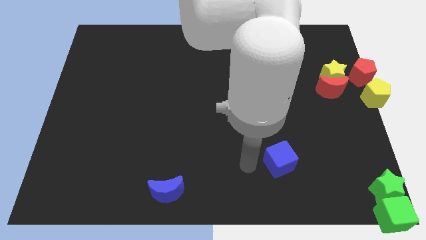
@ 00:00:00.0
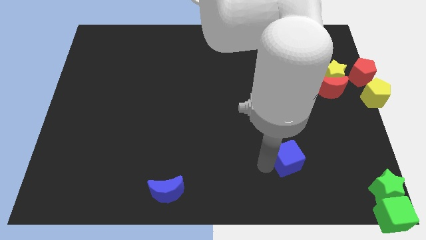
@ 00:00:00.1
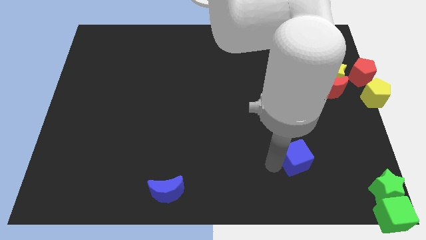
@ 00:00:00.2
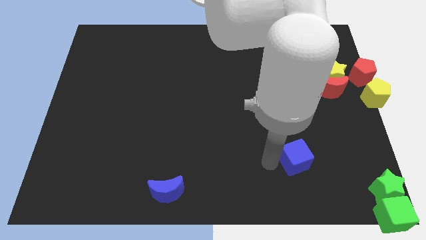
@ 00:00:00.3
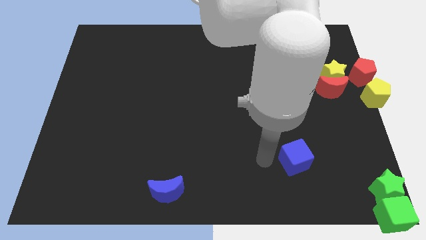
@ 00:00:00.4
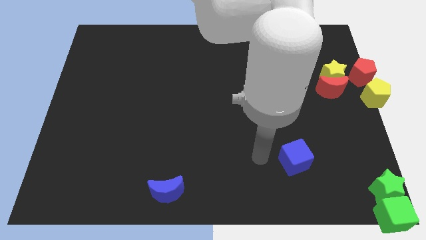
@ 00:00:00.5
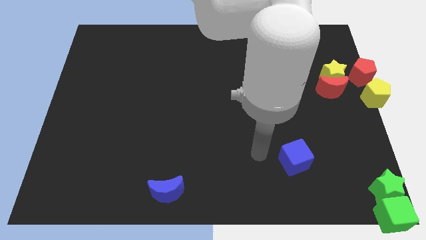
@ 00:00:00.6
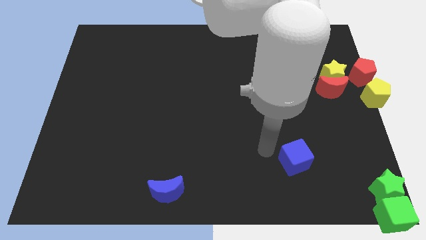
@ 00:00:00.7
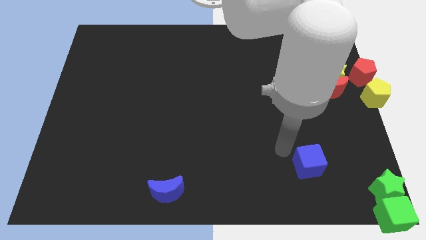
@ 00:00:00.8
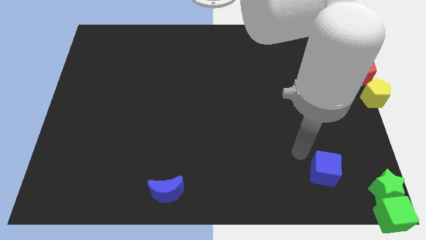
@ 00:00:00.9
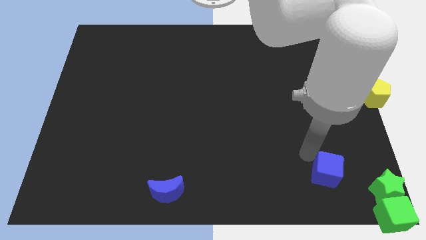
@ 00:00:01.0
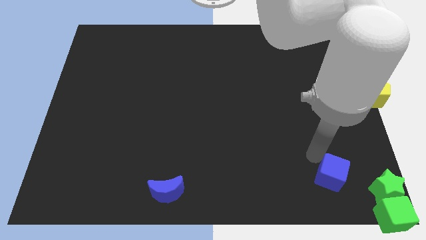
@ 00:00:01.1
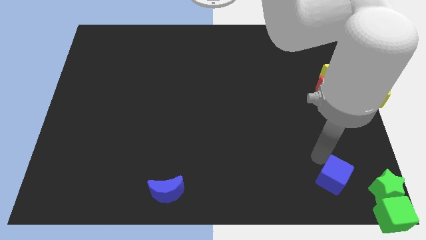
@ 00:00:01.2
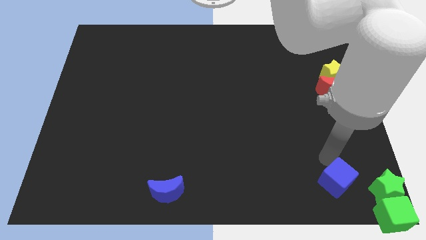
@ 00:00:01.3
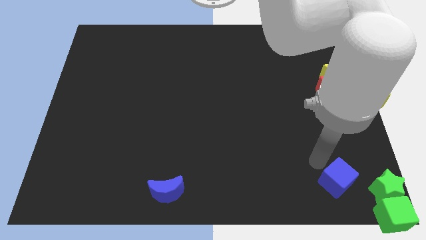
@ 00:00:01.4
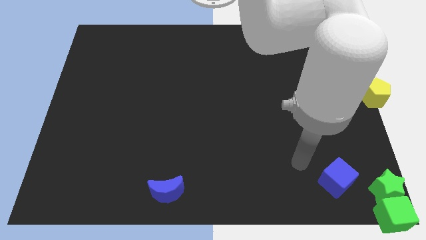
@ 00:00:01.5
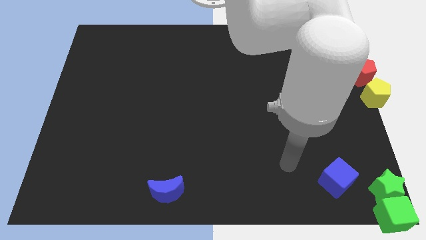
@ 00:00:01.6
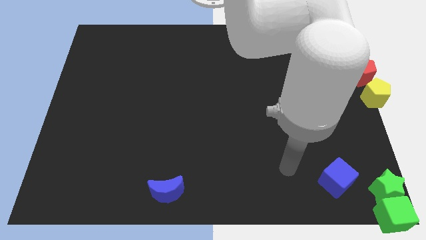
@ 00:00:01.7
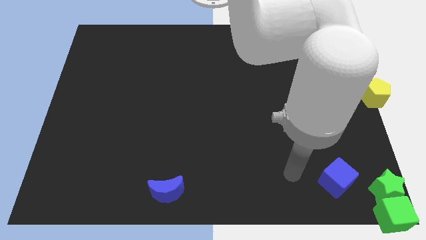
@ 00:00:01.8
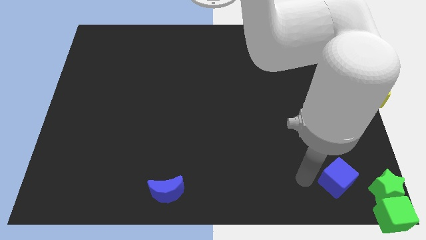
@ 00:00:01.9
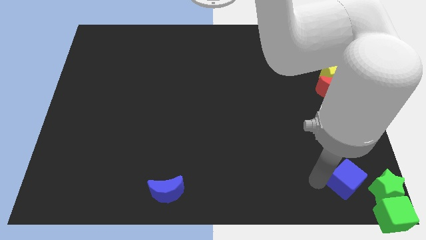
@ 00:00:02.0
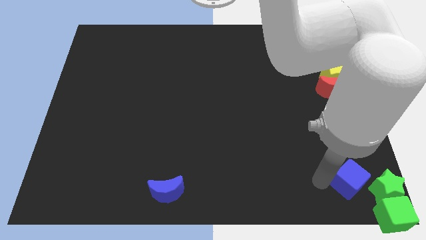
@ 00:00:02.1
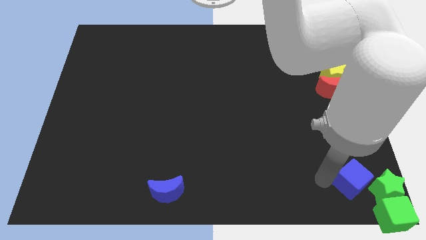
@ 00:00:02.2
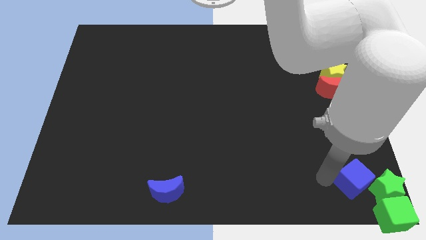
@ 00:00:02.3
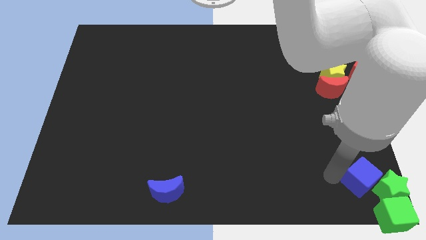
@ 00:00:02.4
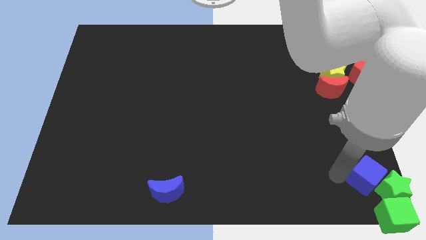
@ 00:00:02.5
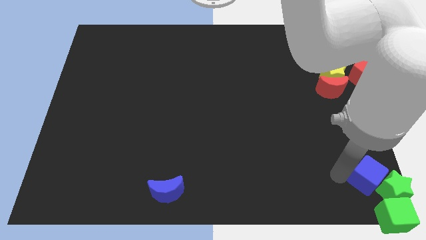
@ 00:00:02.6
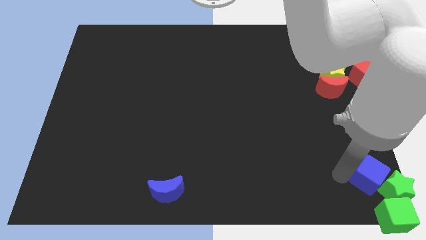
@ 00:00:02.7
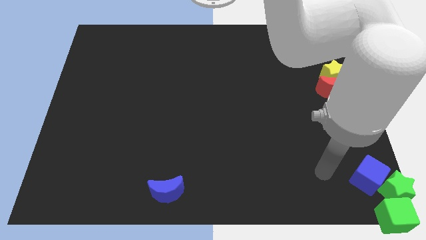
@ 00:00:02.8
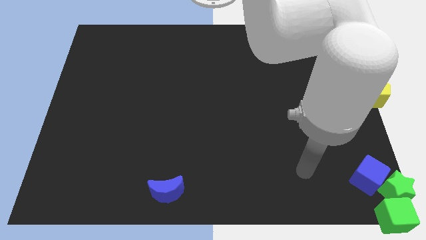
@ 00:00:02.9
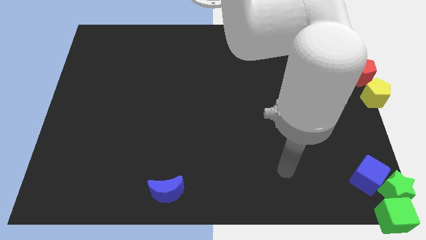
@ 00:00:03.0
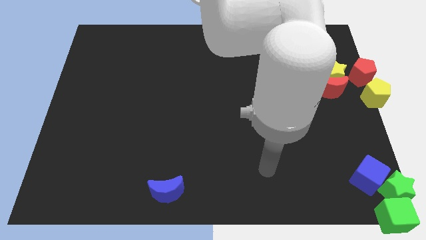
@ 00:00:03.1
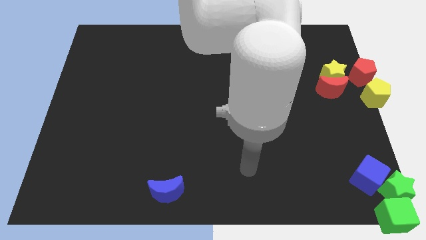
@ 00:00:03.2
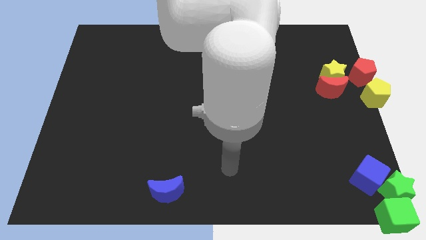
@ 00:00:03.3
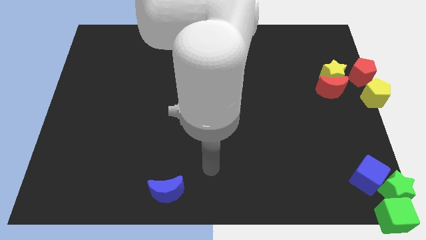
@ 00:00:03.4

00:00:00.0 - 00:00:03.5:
move blue cube into the green star

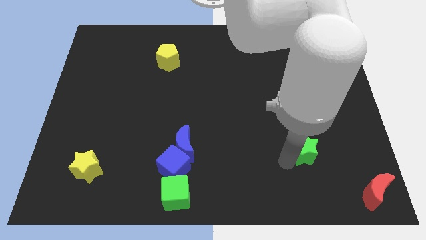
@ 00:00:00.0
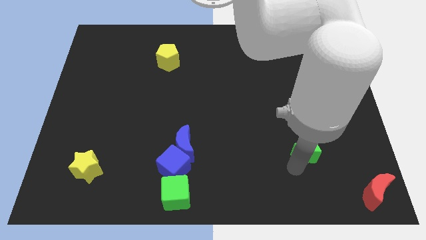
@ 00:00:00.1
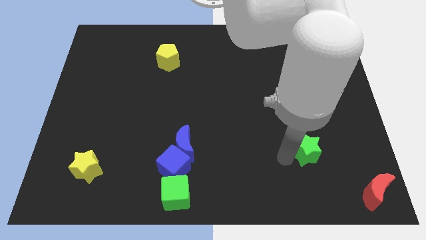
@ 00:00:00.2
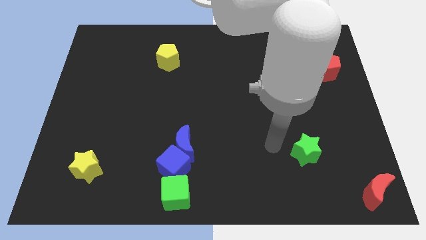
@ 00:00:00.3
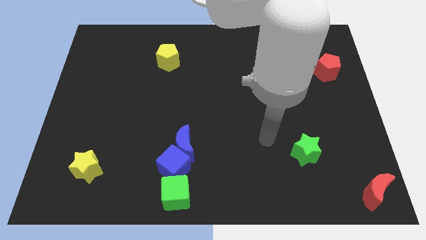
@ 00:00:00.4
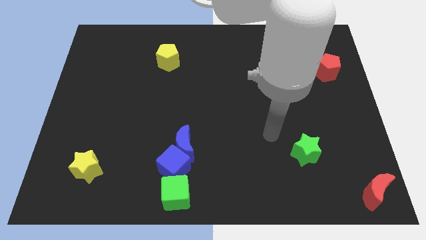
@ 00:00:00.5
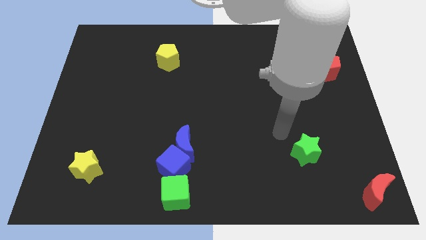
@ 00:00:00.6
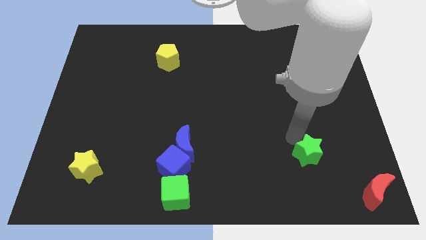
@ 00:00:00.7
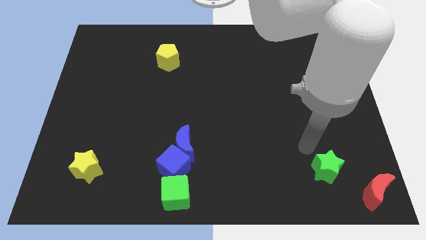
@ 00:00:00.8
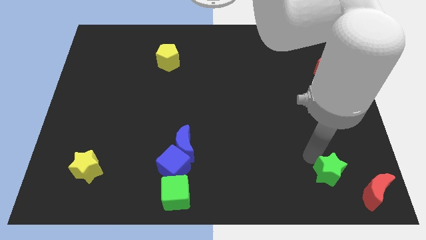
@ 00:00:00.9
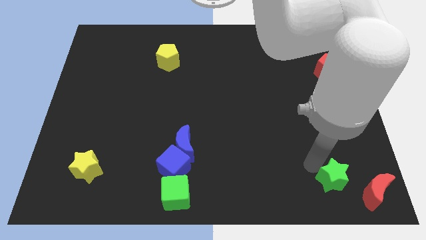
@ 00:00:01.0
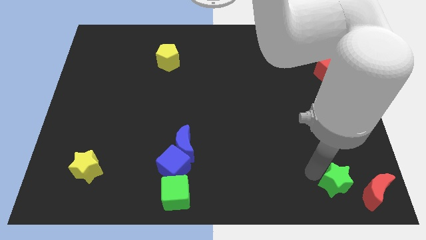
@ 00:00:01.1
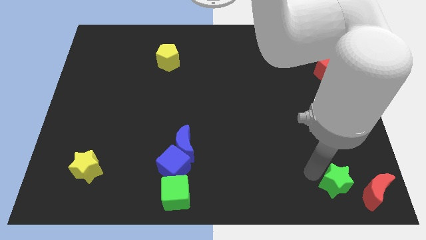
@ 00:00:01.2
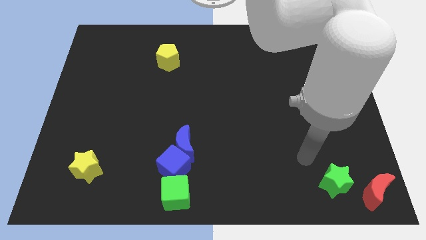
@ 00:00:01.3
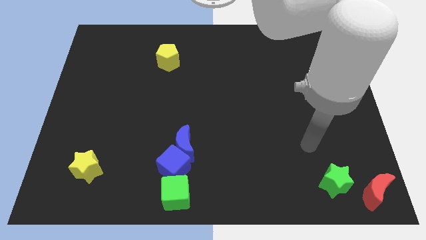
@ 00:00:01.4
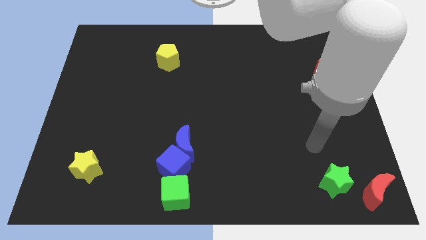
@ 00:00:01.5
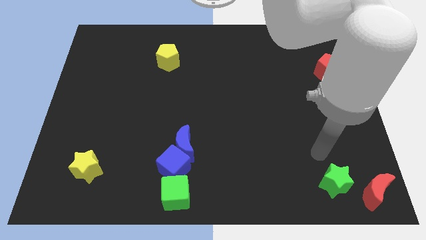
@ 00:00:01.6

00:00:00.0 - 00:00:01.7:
move the green star to the left side of the red moon

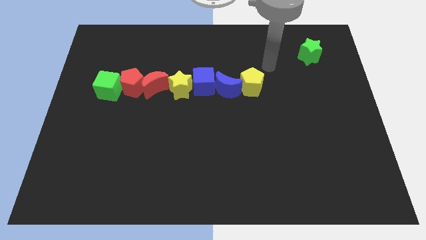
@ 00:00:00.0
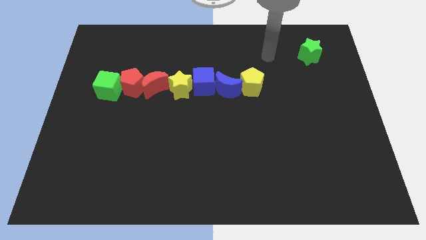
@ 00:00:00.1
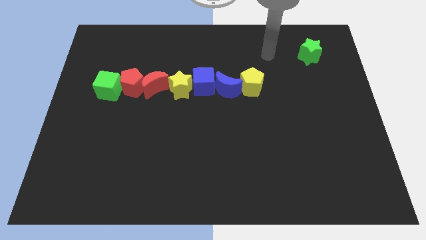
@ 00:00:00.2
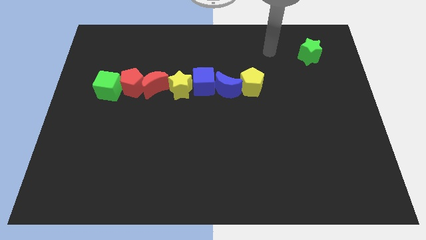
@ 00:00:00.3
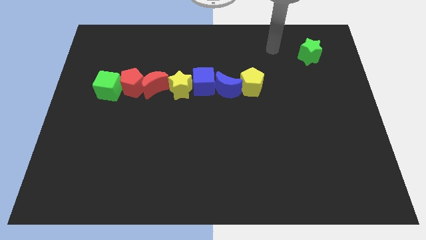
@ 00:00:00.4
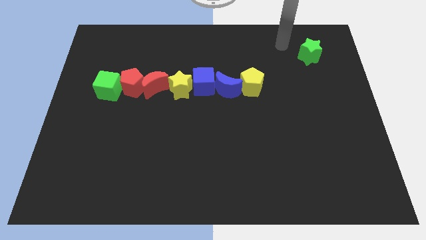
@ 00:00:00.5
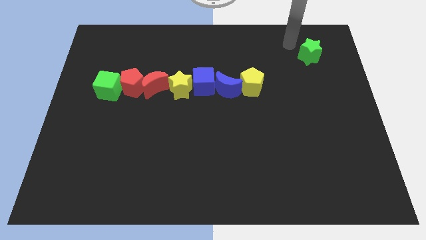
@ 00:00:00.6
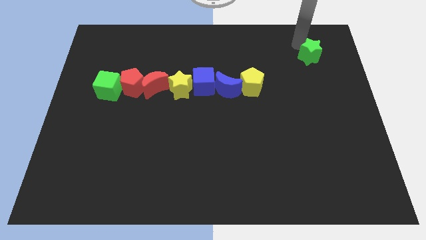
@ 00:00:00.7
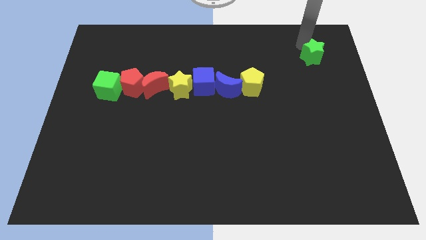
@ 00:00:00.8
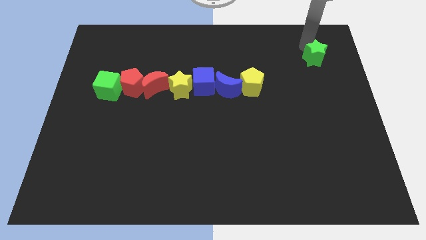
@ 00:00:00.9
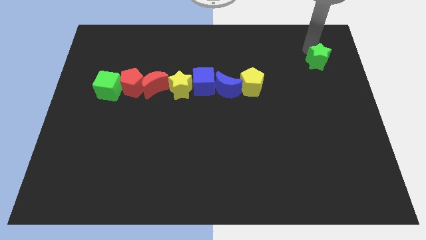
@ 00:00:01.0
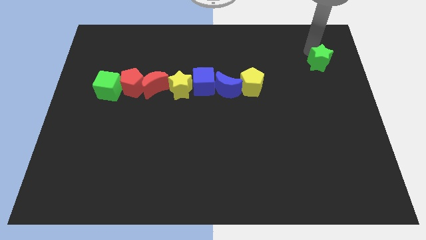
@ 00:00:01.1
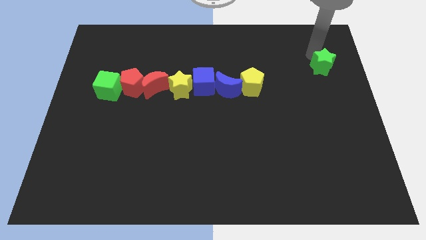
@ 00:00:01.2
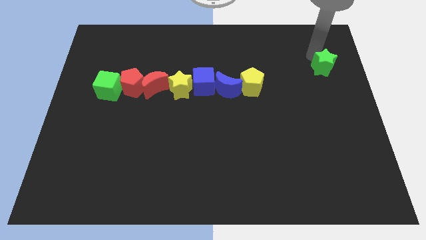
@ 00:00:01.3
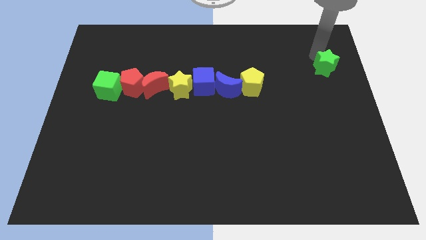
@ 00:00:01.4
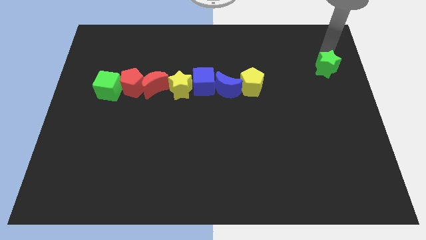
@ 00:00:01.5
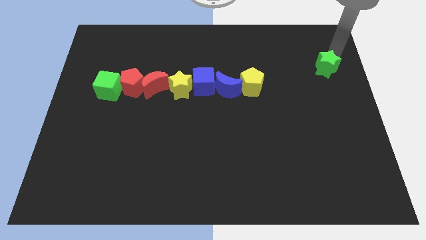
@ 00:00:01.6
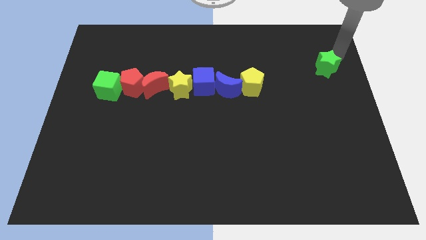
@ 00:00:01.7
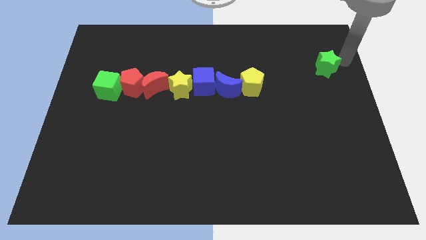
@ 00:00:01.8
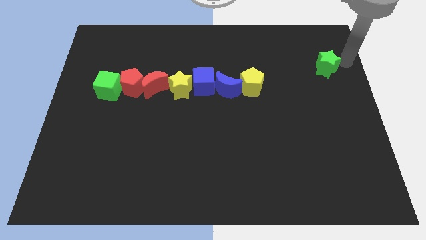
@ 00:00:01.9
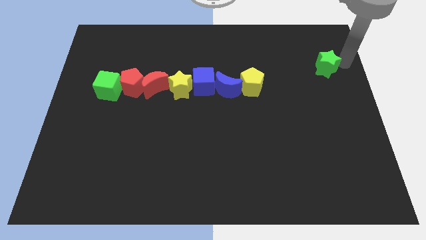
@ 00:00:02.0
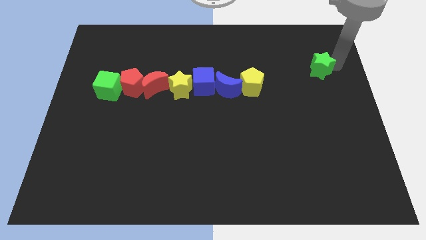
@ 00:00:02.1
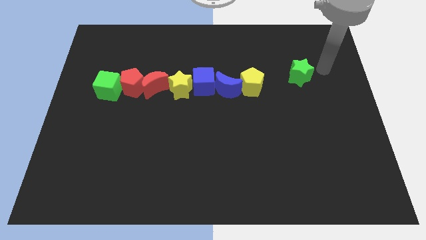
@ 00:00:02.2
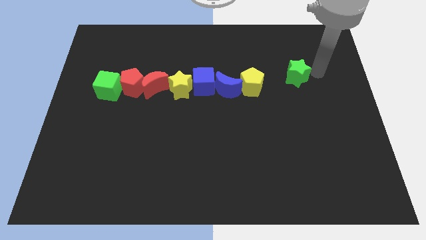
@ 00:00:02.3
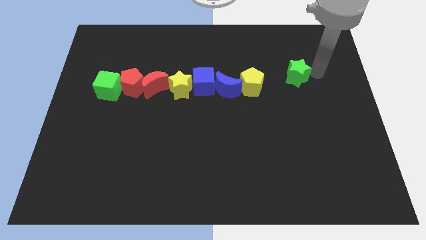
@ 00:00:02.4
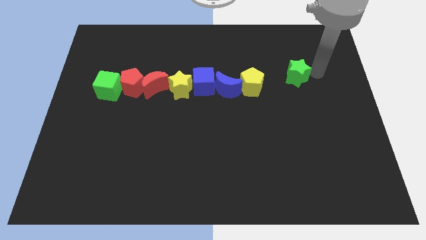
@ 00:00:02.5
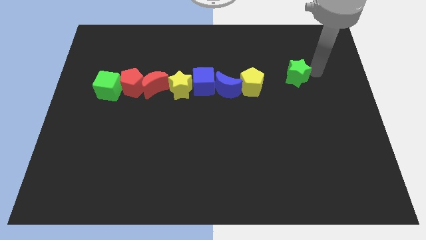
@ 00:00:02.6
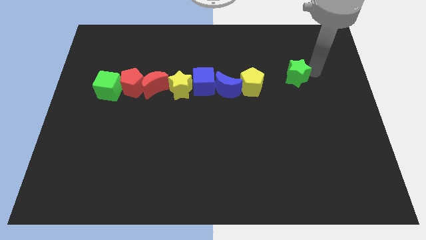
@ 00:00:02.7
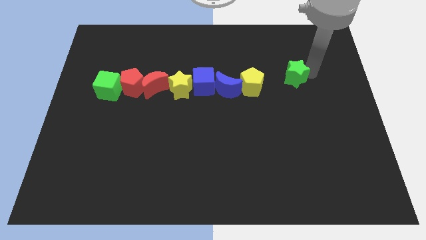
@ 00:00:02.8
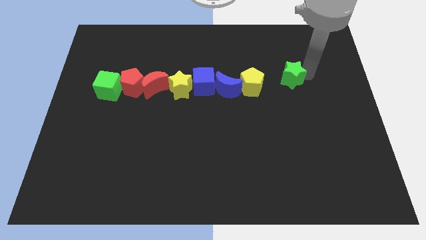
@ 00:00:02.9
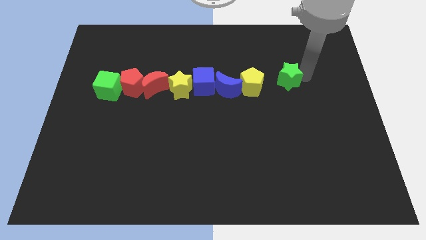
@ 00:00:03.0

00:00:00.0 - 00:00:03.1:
push the green star slightly downside

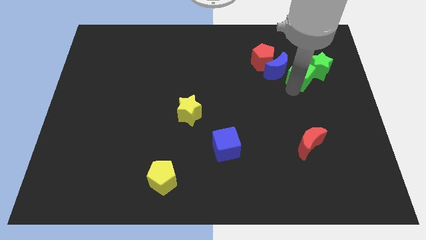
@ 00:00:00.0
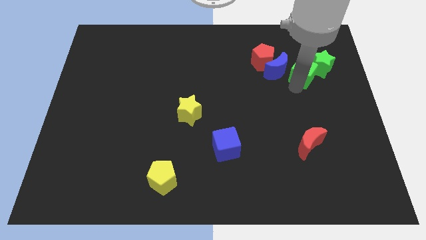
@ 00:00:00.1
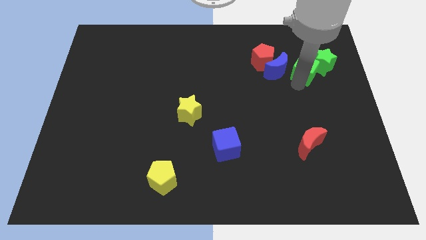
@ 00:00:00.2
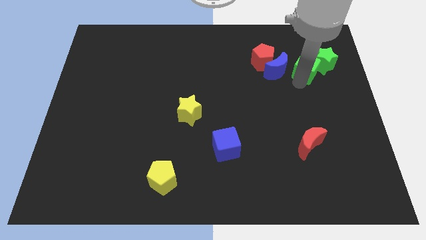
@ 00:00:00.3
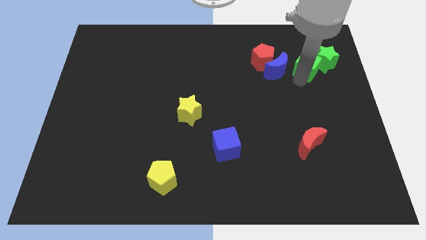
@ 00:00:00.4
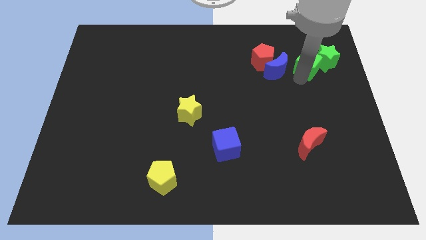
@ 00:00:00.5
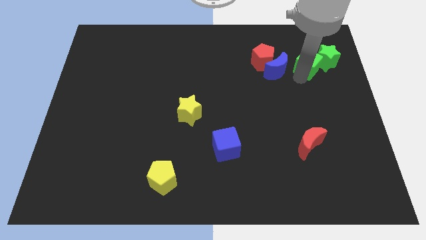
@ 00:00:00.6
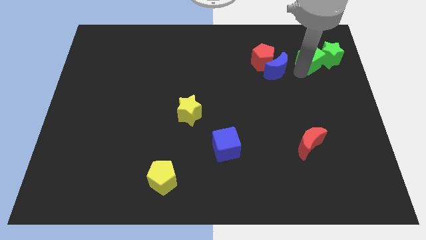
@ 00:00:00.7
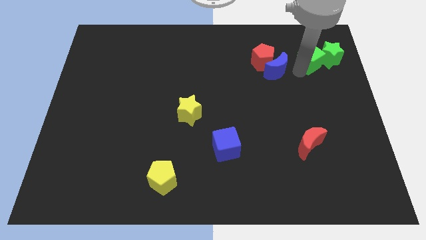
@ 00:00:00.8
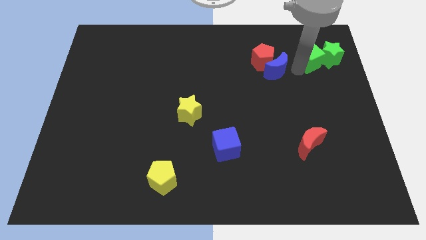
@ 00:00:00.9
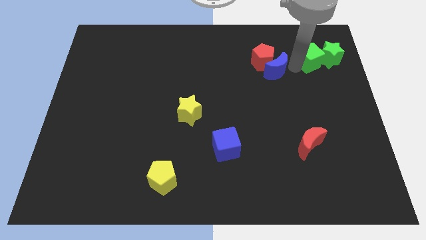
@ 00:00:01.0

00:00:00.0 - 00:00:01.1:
push green blocks towards top right
